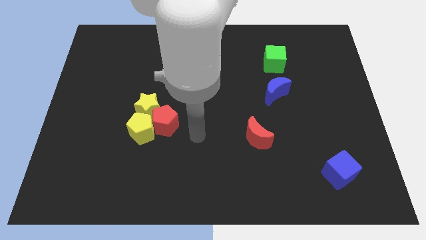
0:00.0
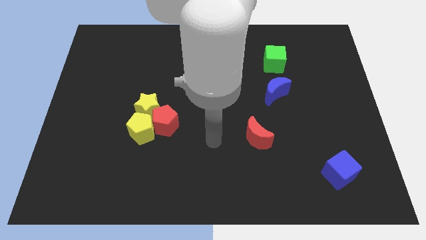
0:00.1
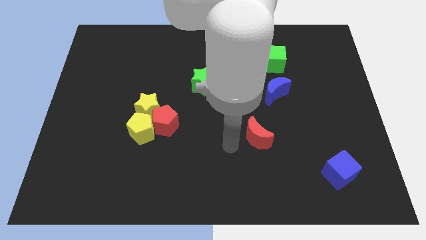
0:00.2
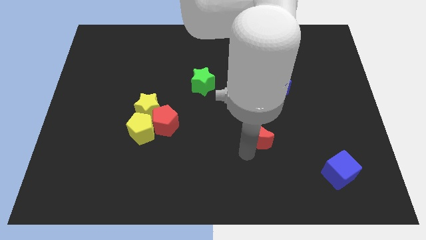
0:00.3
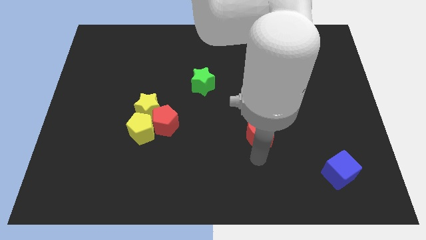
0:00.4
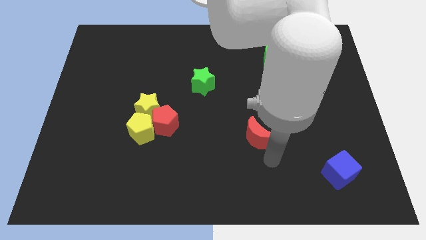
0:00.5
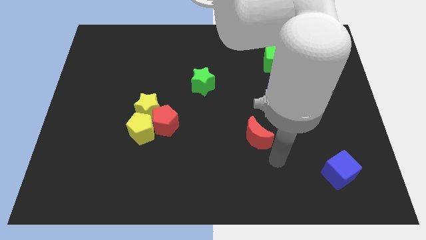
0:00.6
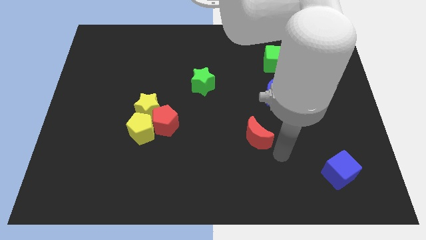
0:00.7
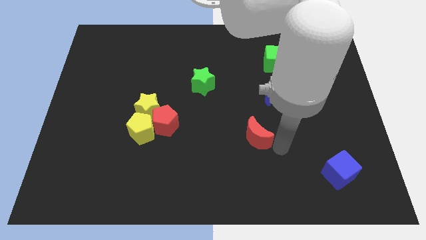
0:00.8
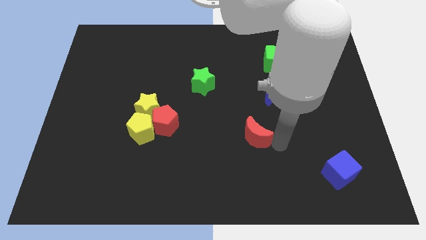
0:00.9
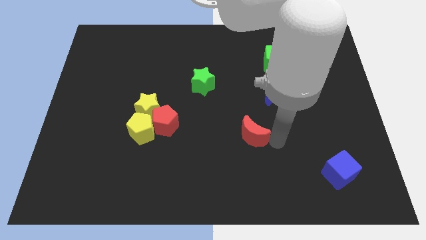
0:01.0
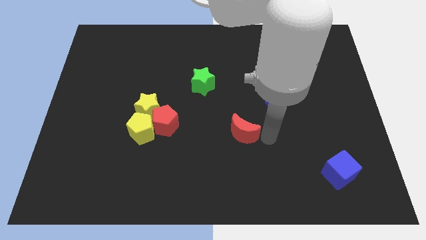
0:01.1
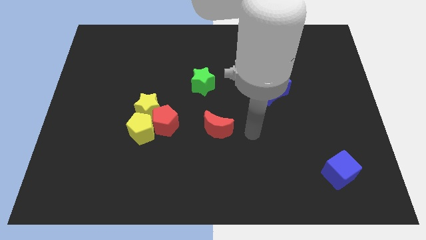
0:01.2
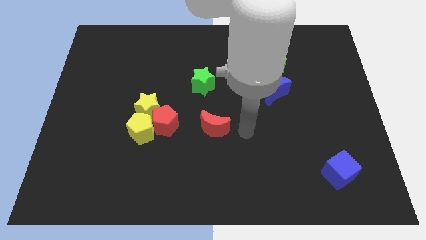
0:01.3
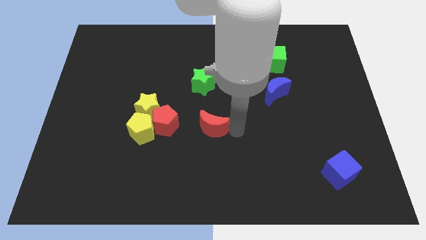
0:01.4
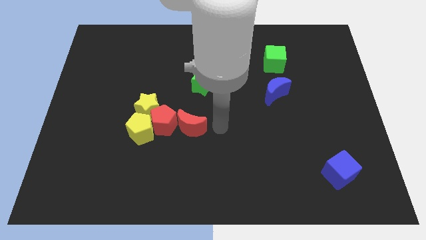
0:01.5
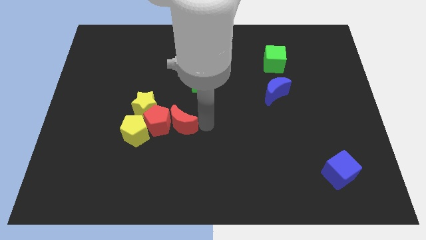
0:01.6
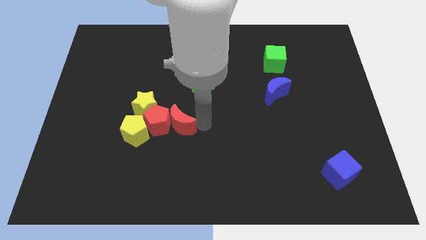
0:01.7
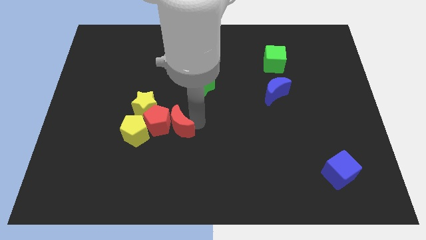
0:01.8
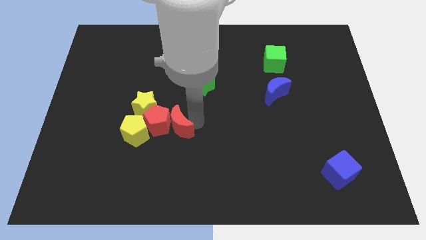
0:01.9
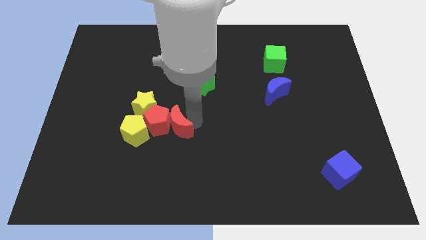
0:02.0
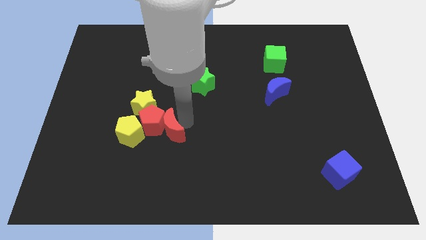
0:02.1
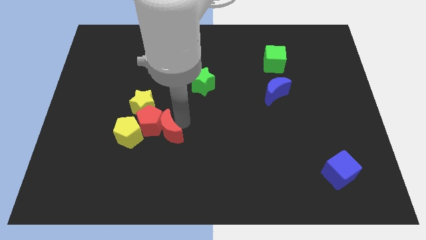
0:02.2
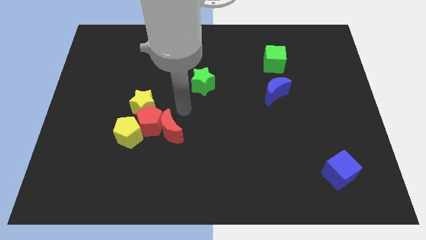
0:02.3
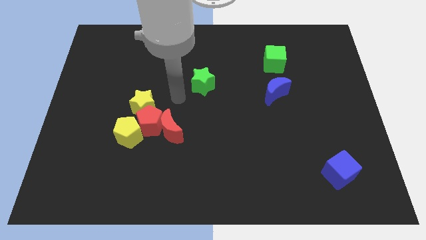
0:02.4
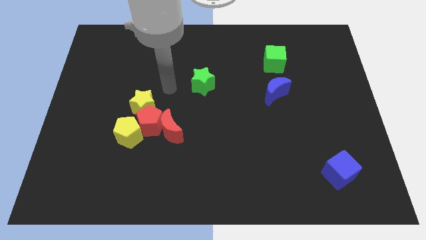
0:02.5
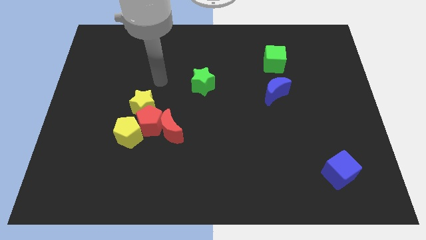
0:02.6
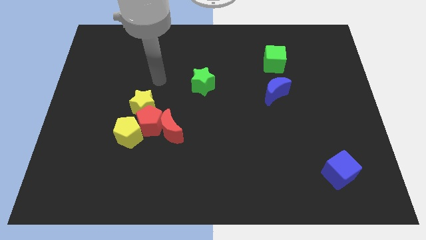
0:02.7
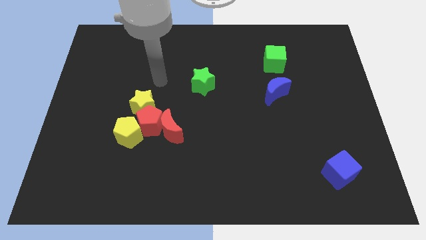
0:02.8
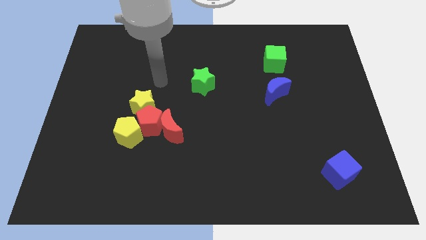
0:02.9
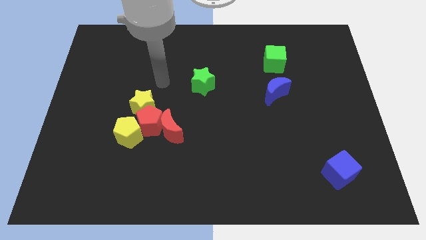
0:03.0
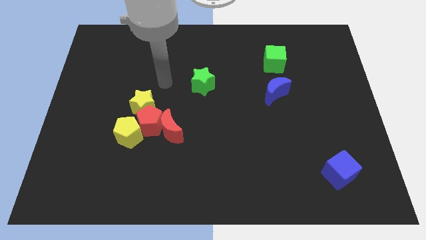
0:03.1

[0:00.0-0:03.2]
move the red crescent to the right of the red pentagon

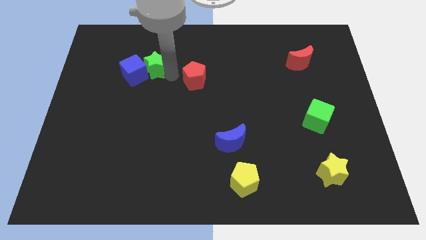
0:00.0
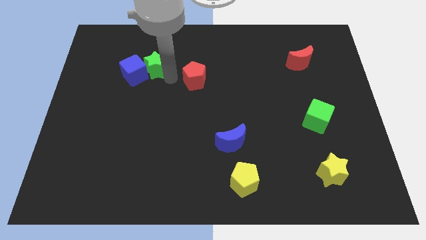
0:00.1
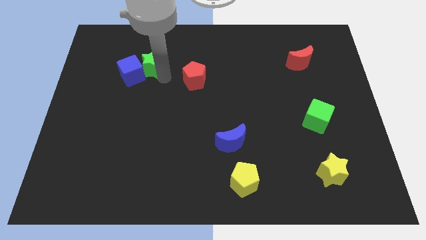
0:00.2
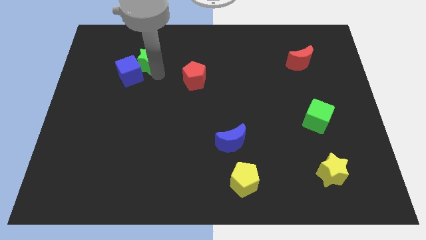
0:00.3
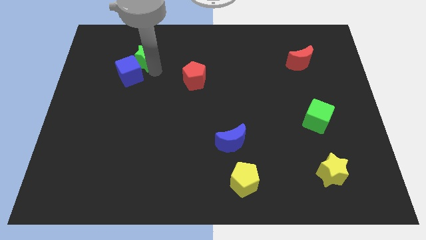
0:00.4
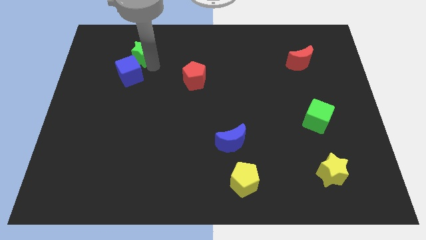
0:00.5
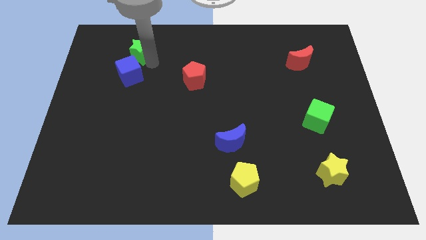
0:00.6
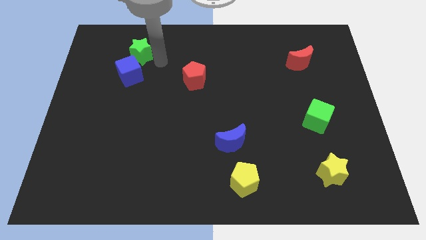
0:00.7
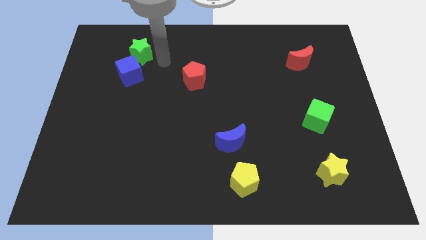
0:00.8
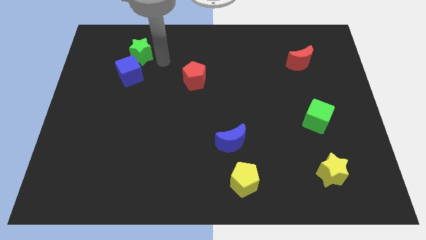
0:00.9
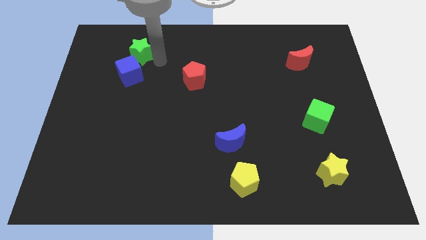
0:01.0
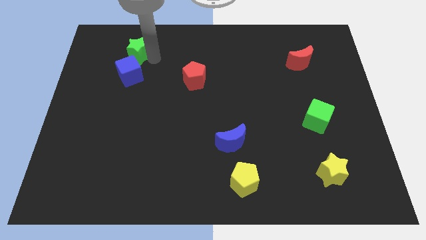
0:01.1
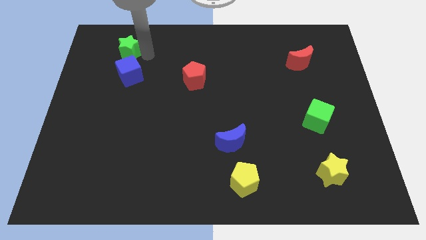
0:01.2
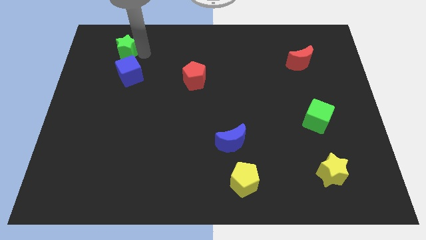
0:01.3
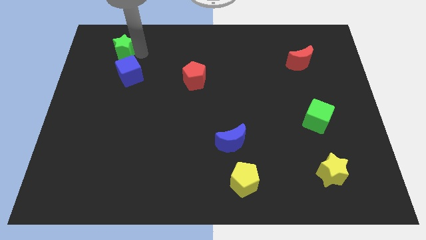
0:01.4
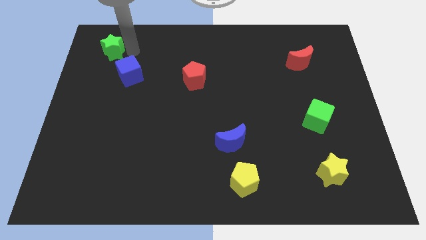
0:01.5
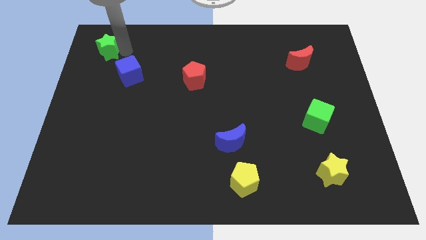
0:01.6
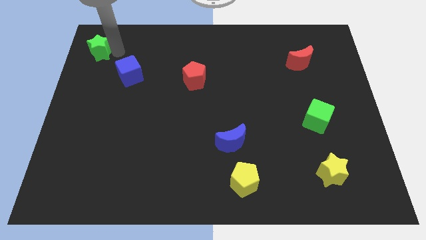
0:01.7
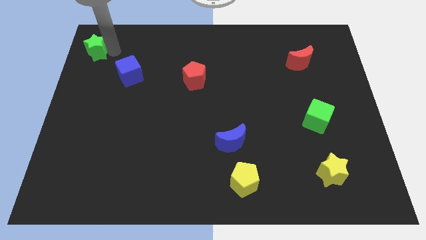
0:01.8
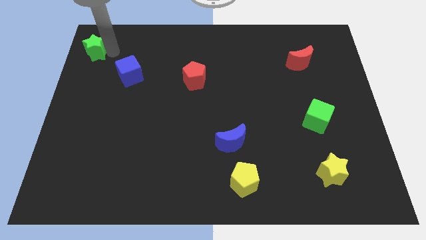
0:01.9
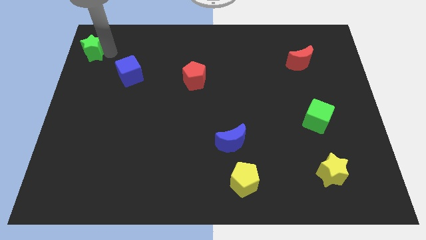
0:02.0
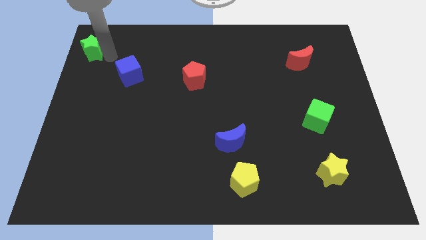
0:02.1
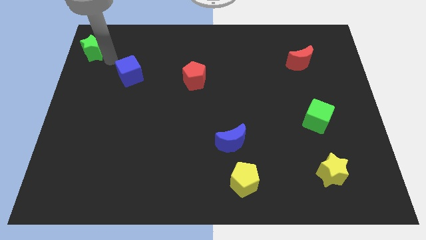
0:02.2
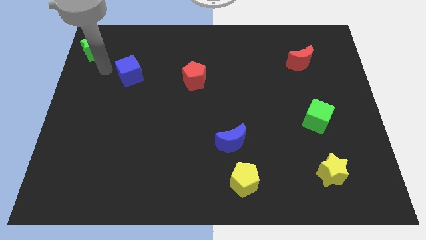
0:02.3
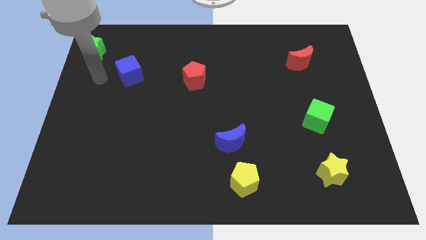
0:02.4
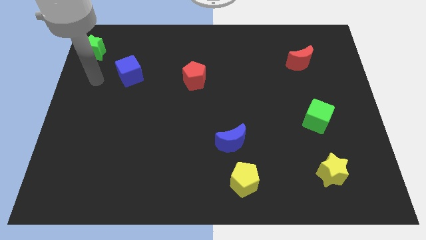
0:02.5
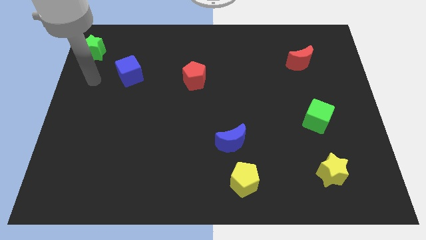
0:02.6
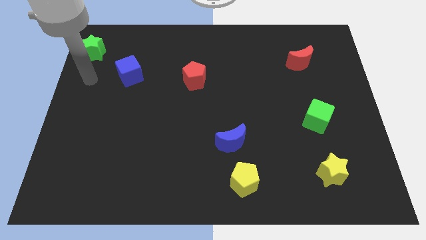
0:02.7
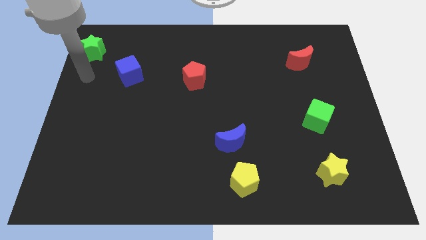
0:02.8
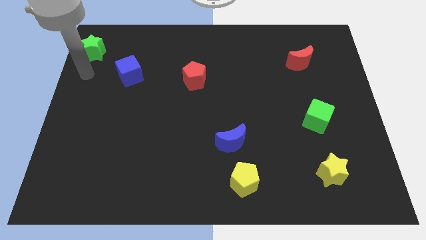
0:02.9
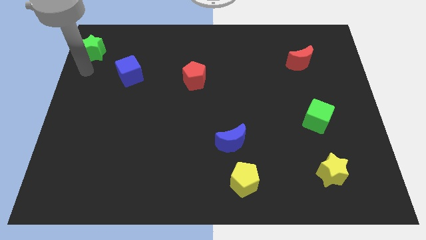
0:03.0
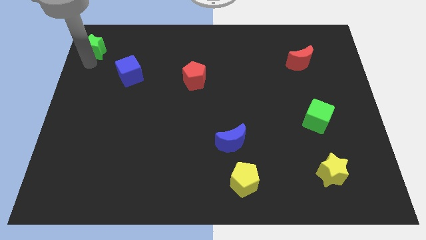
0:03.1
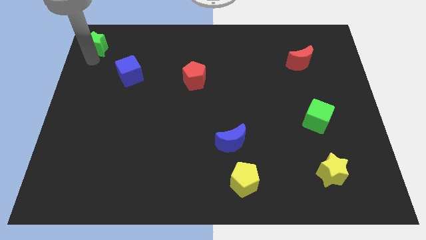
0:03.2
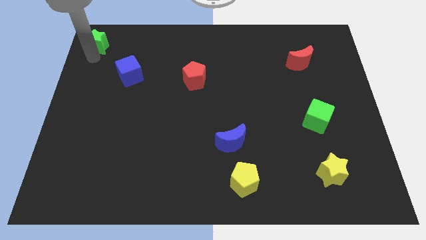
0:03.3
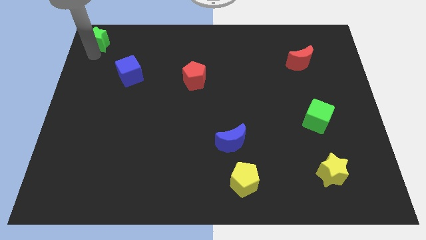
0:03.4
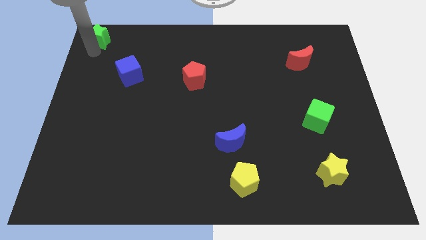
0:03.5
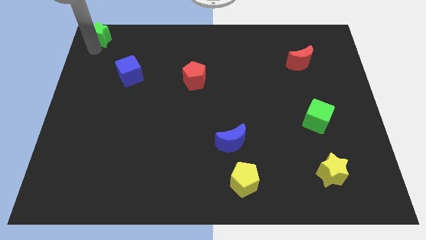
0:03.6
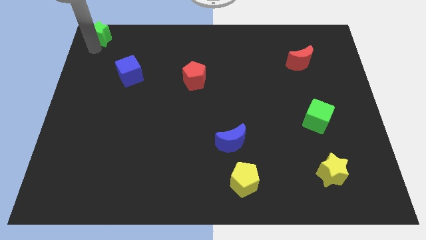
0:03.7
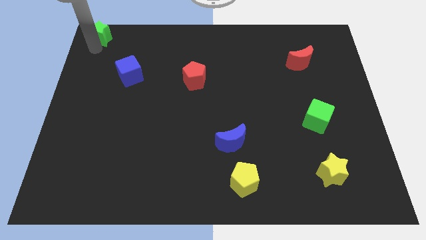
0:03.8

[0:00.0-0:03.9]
move the green star to the top left side of the board

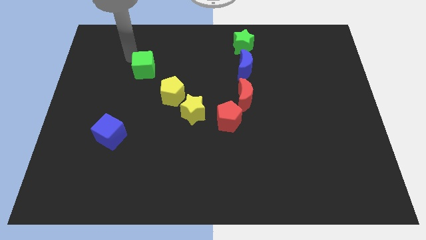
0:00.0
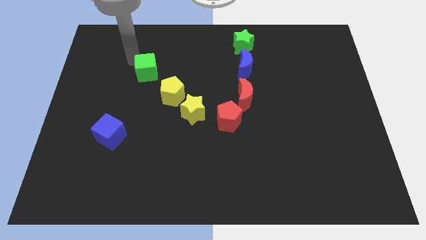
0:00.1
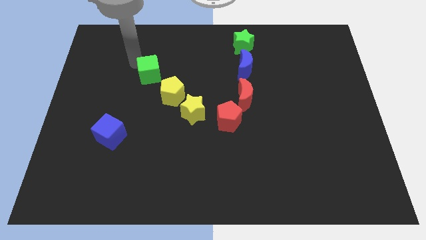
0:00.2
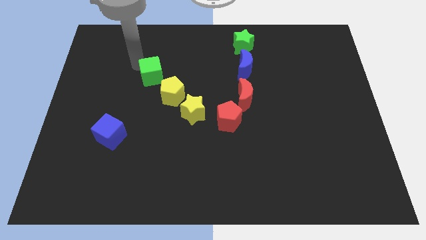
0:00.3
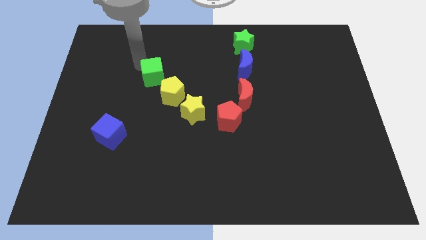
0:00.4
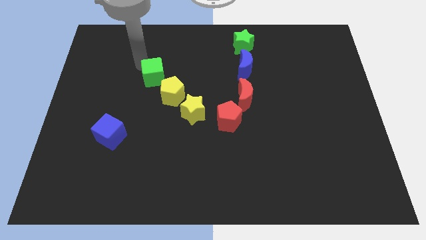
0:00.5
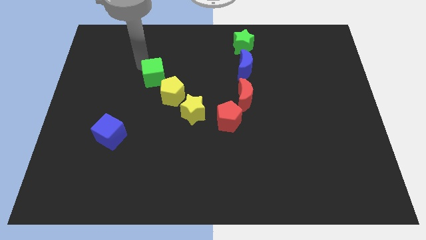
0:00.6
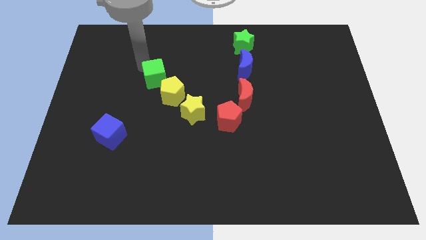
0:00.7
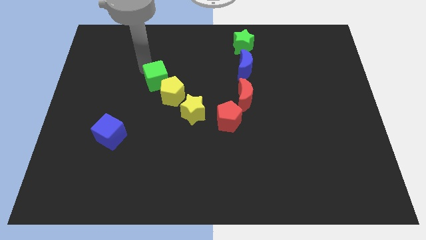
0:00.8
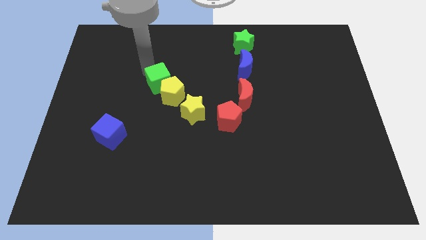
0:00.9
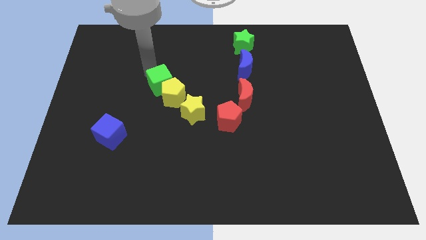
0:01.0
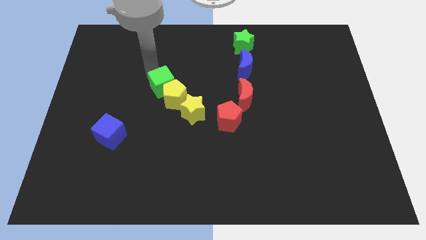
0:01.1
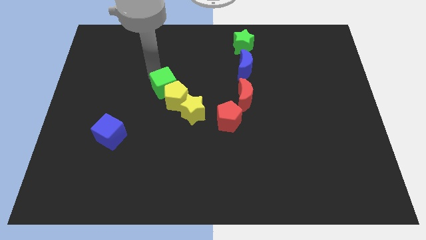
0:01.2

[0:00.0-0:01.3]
push the green cube slightly downwards

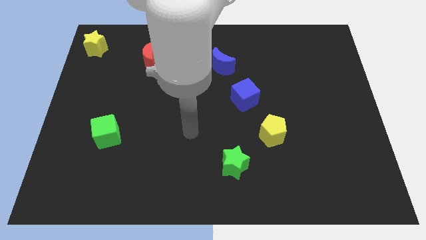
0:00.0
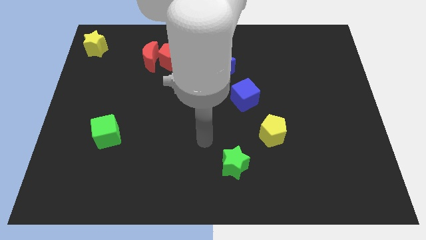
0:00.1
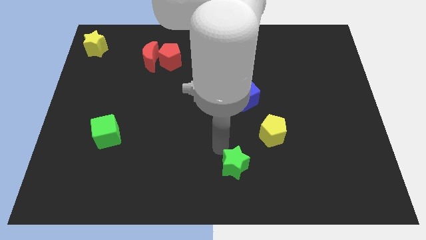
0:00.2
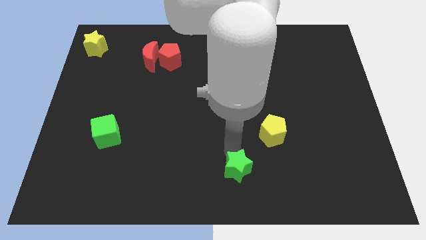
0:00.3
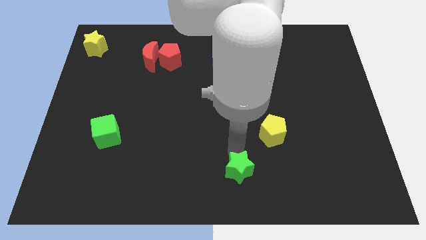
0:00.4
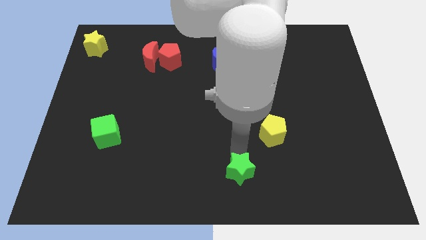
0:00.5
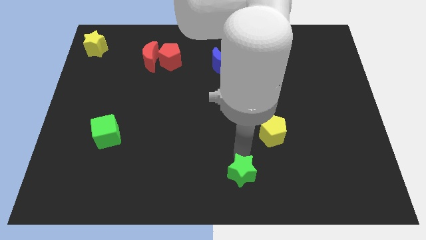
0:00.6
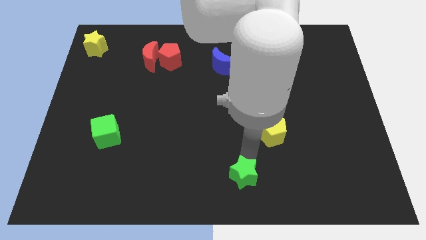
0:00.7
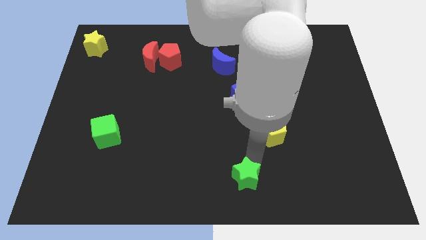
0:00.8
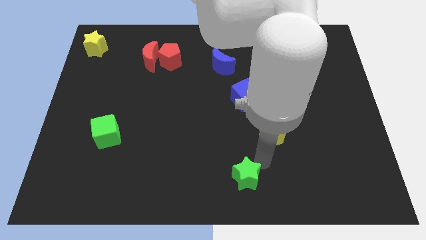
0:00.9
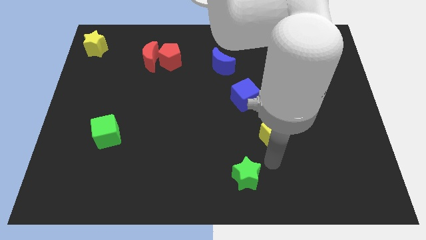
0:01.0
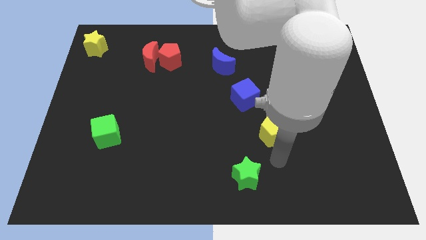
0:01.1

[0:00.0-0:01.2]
push the green star towards the bottom of the board
